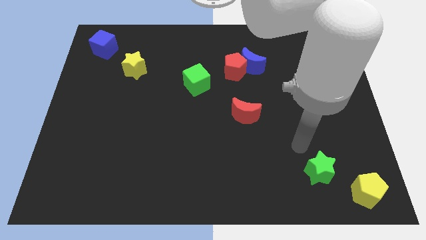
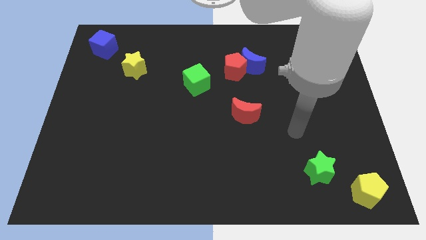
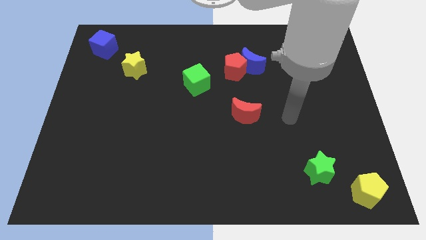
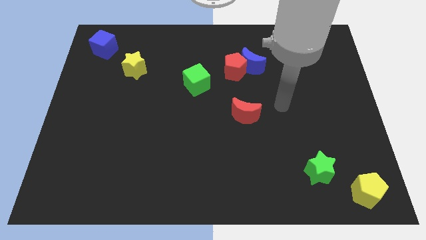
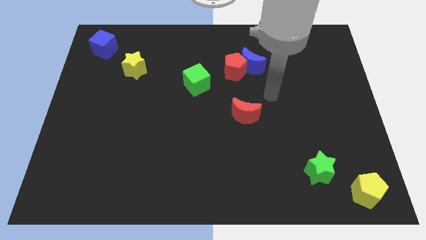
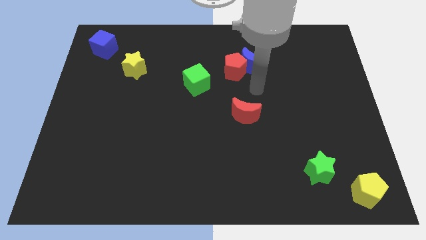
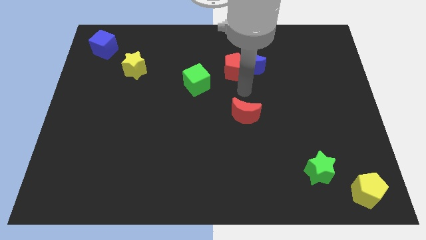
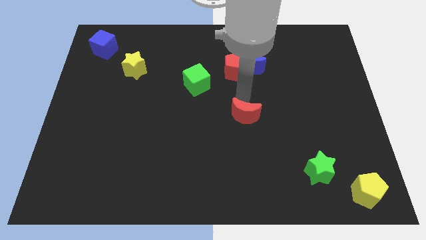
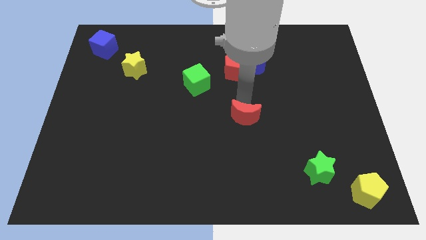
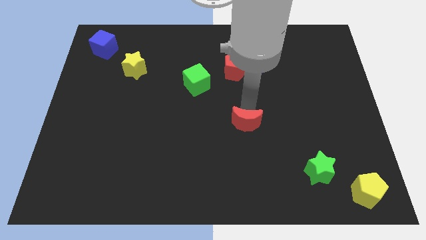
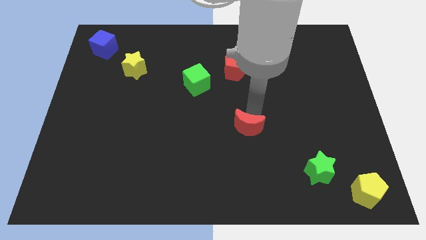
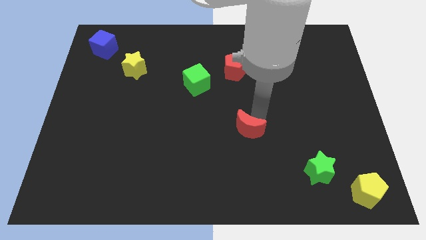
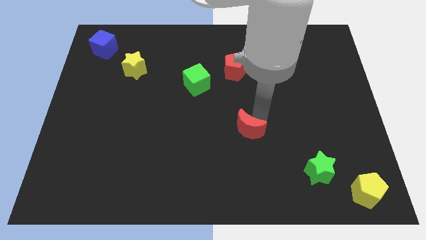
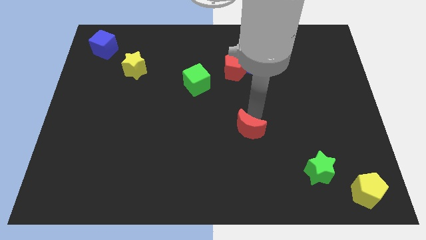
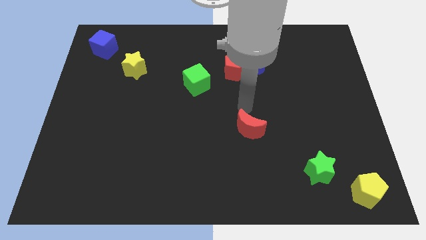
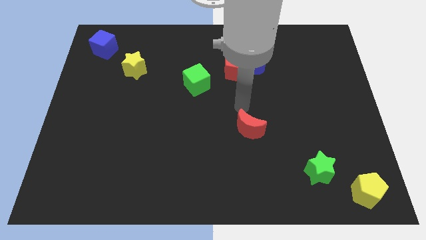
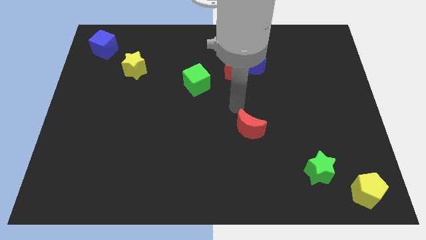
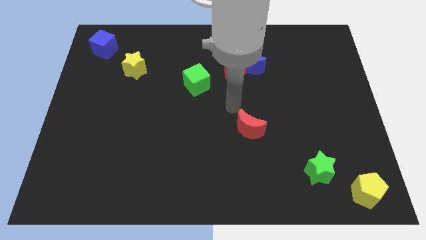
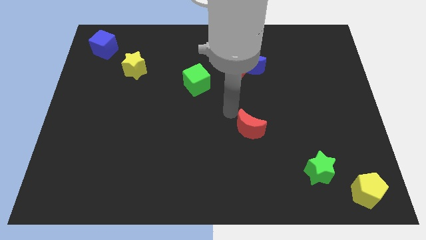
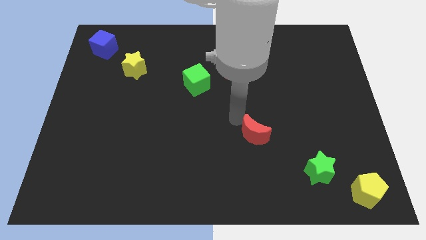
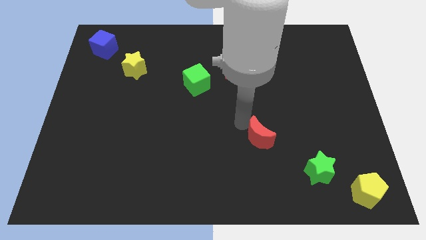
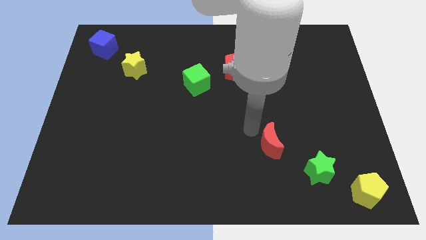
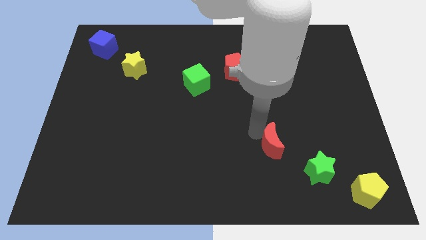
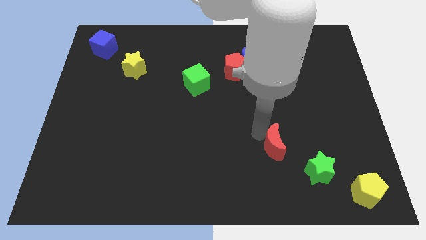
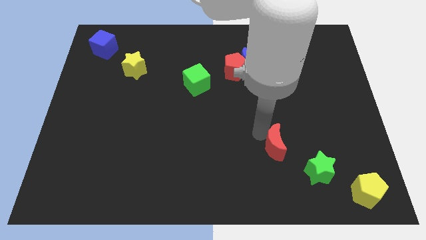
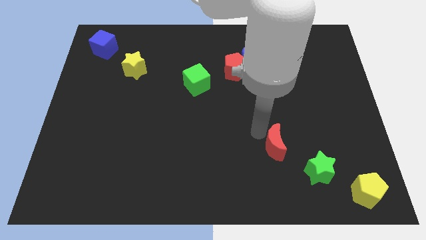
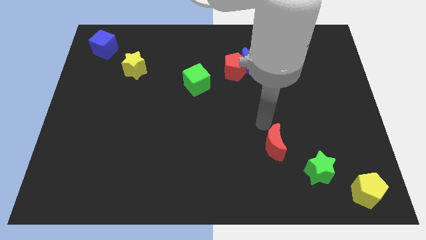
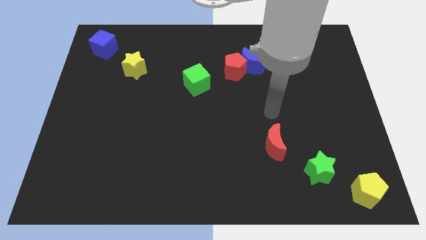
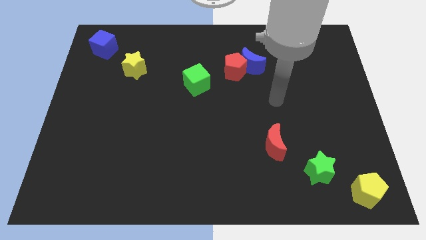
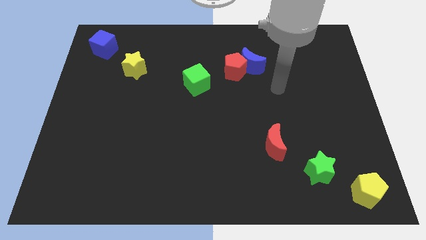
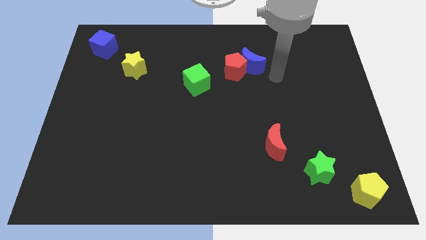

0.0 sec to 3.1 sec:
make a diagonal line with the red crescent green star and yellow pentagon

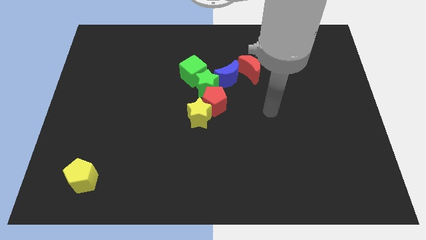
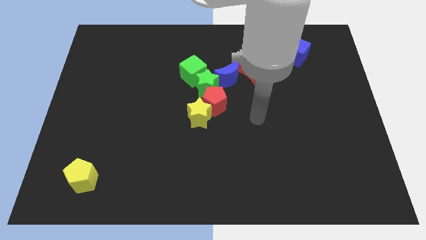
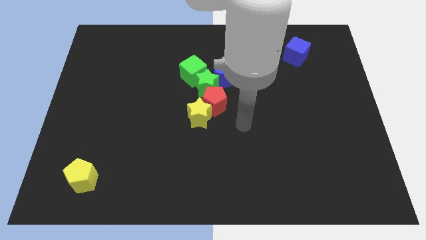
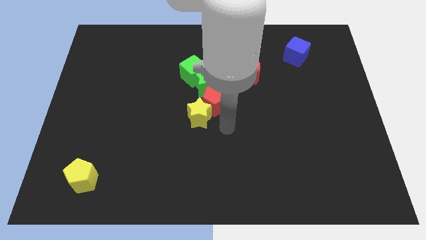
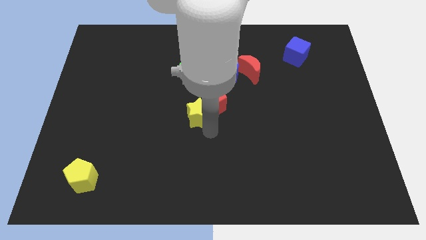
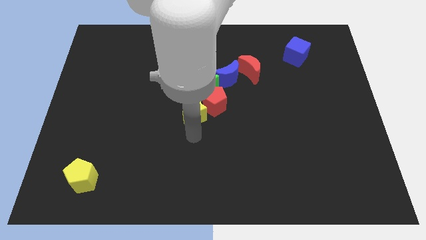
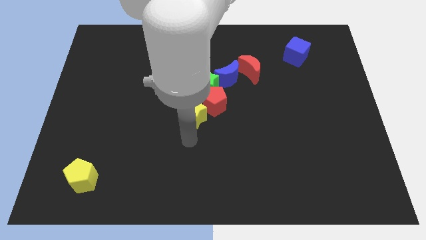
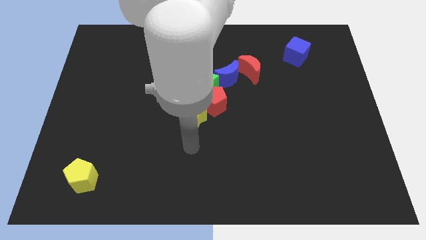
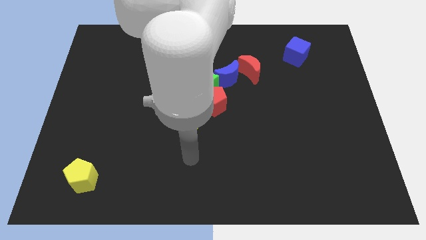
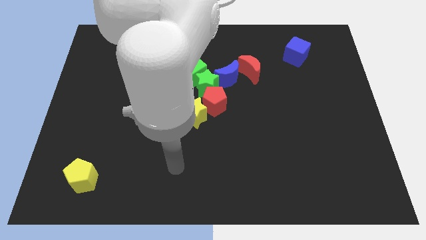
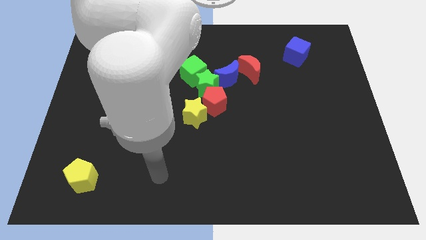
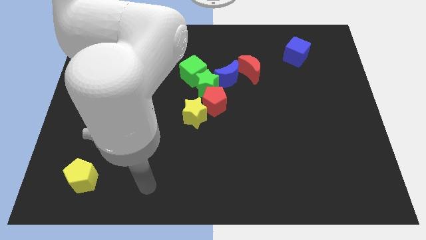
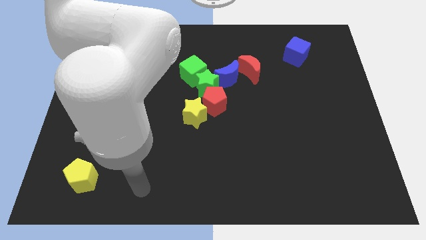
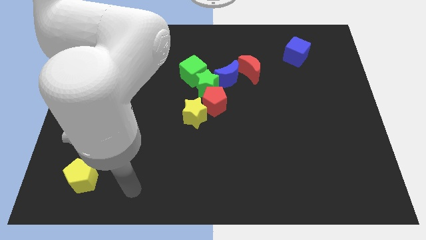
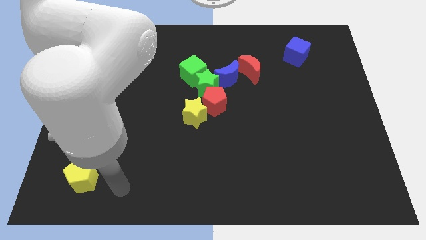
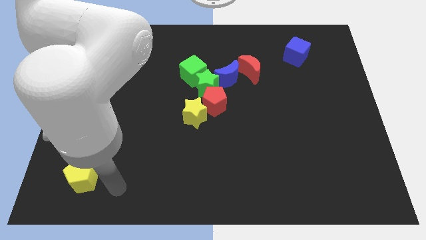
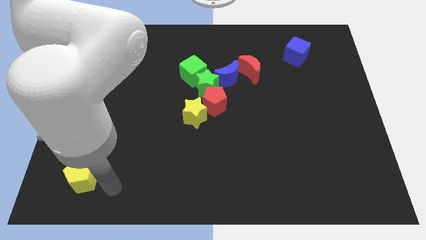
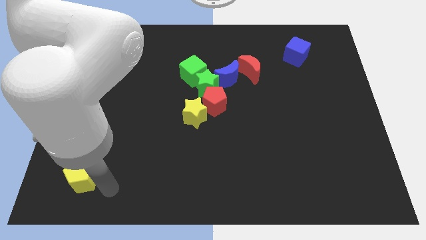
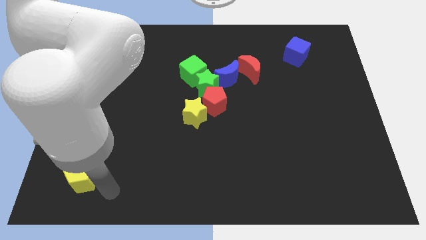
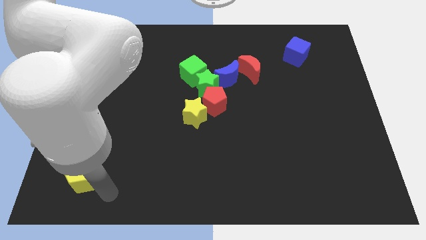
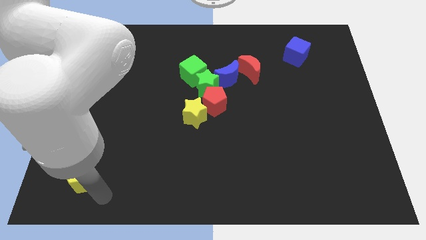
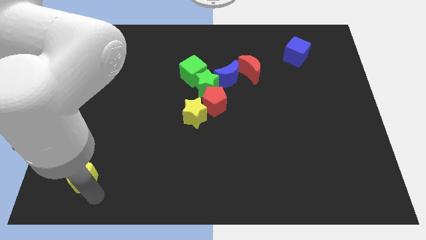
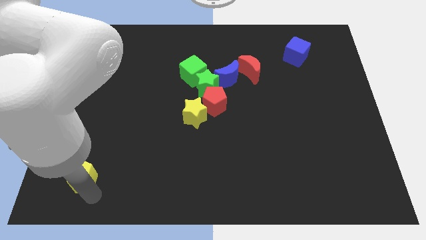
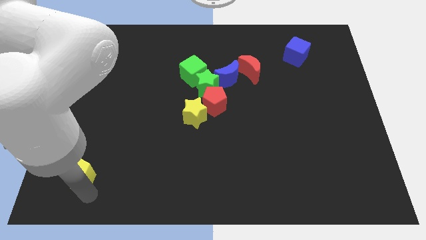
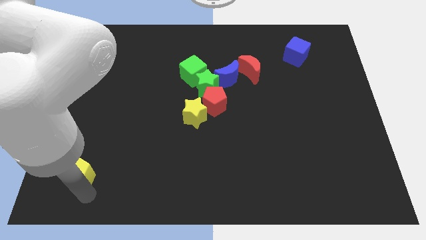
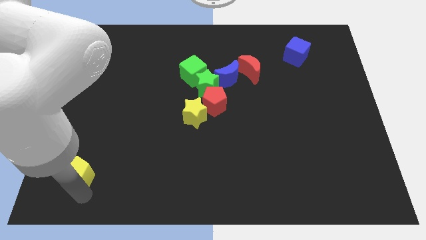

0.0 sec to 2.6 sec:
go away from the group of blocks

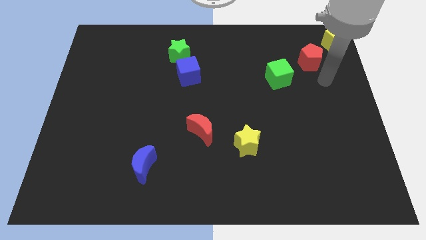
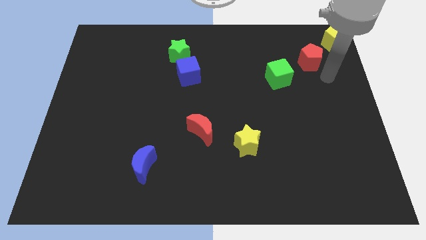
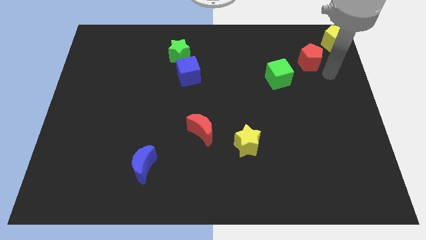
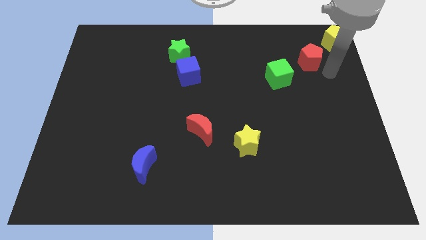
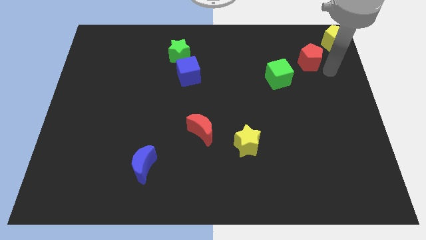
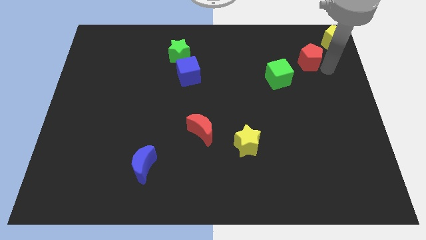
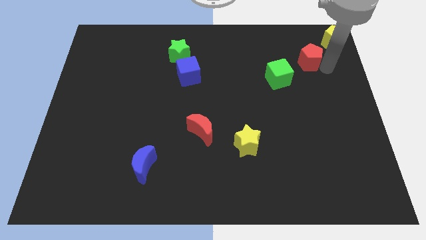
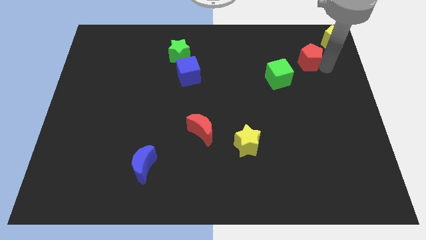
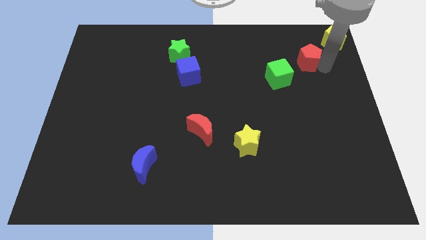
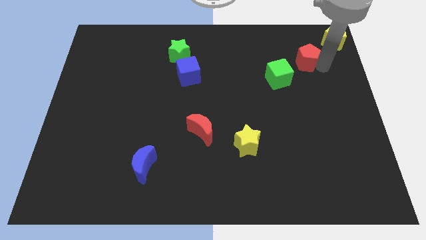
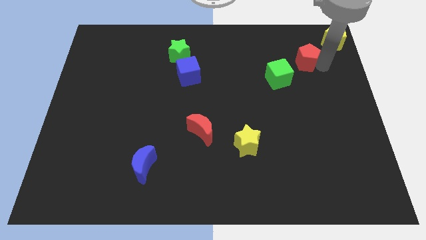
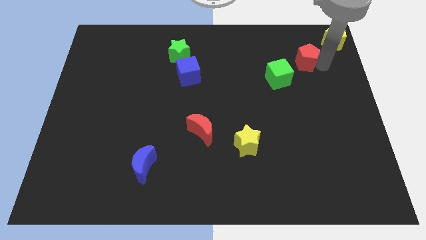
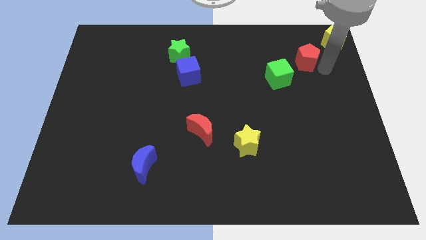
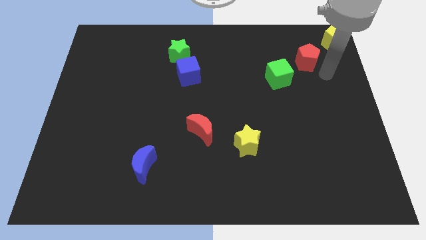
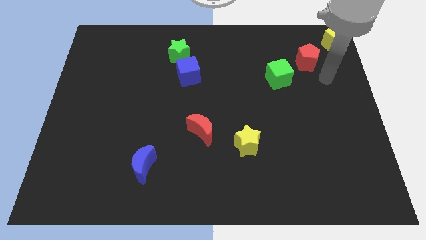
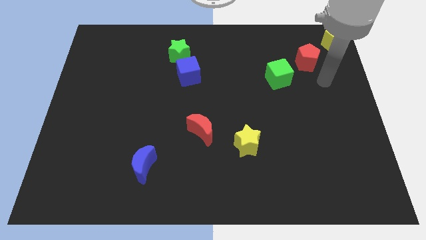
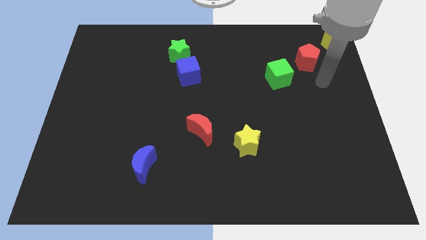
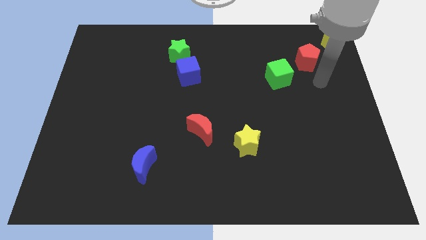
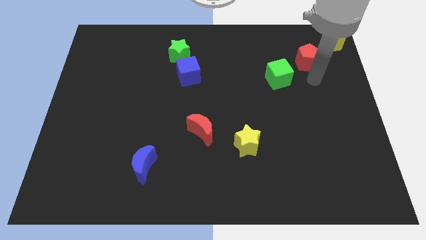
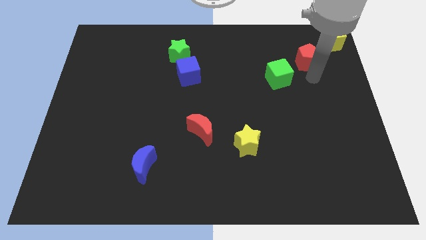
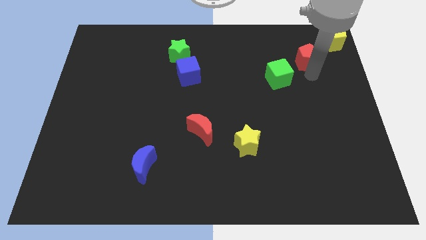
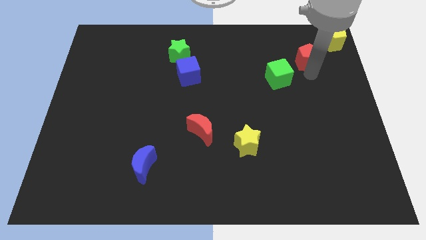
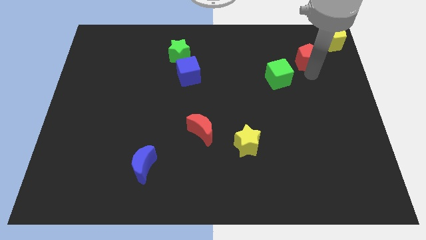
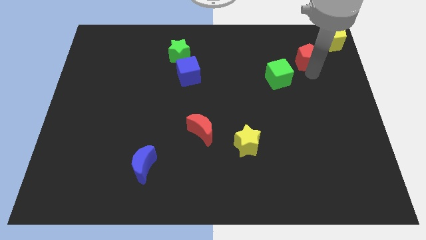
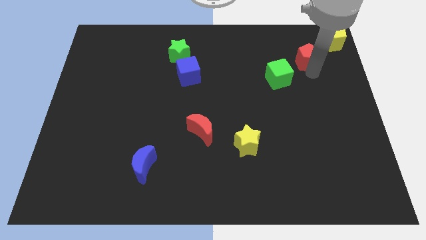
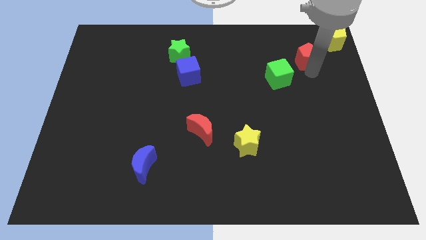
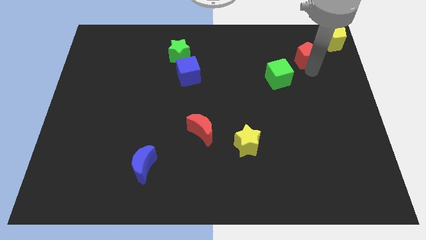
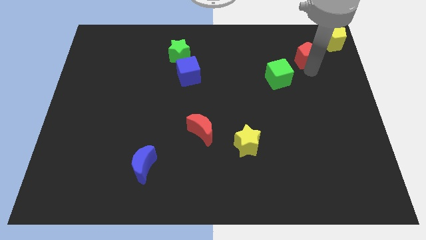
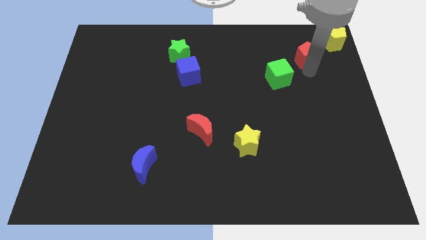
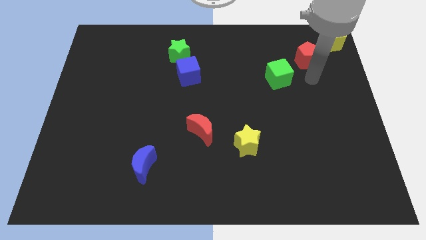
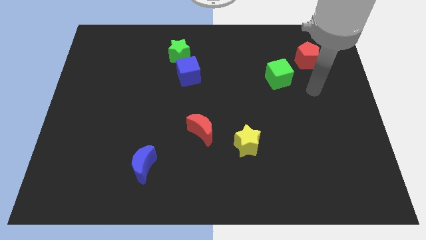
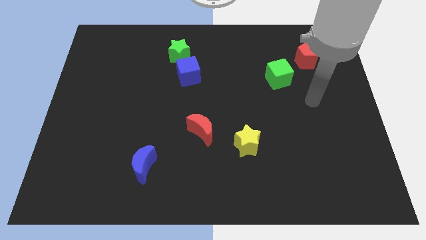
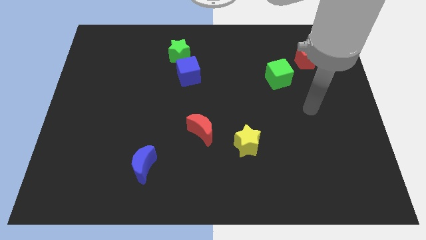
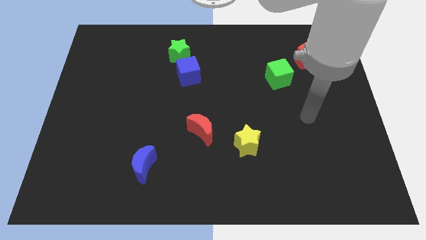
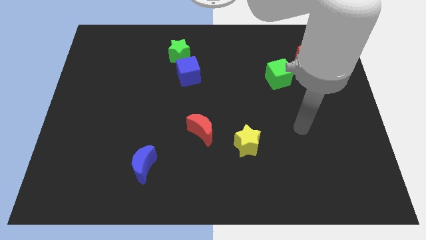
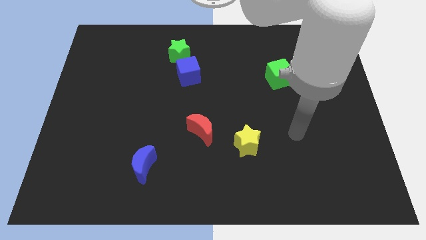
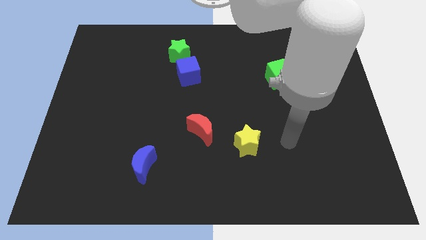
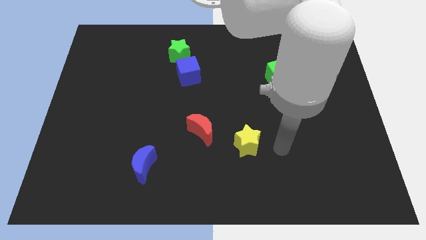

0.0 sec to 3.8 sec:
push the red pentagon slightly in between the yellow pentagon and green cube
